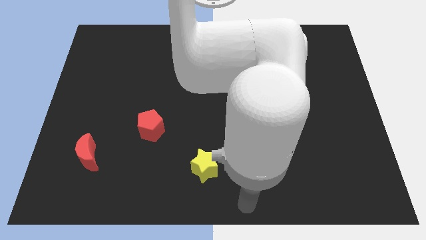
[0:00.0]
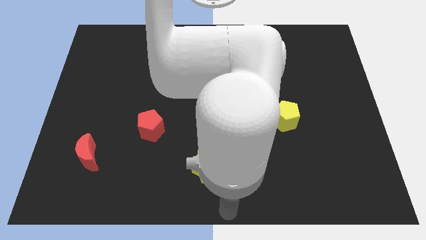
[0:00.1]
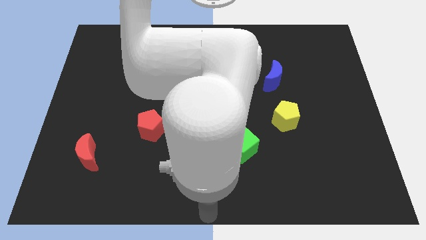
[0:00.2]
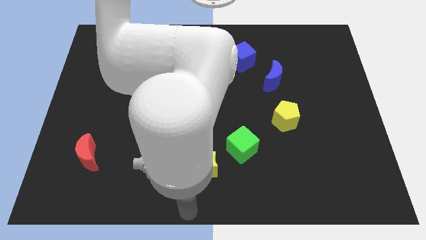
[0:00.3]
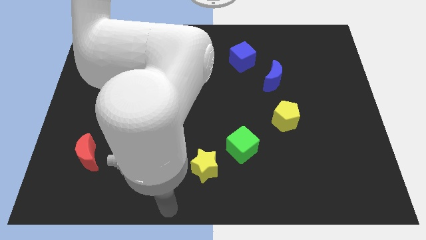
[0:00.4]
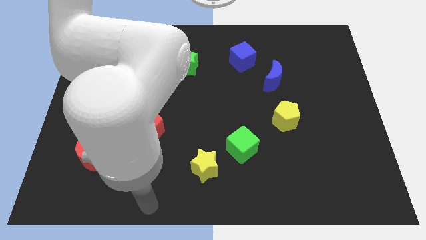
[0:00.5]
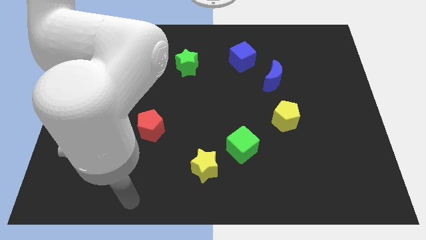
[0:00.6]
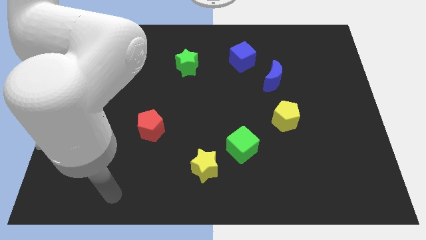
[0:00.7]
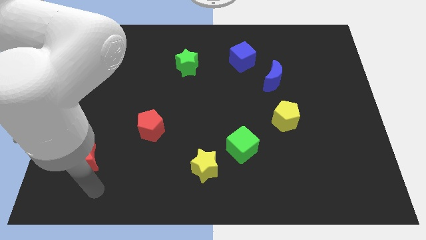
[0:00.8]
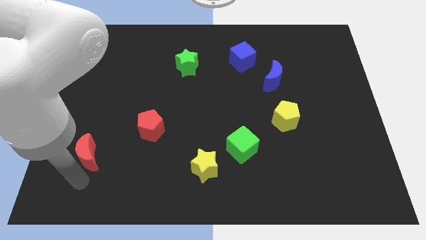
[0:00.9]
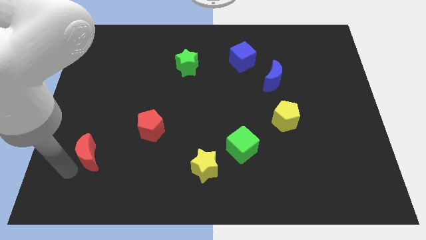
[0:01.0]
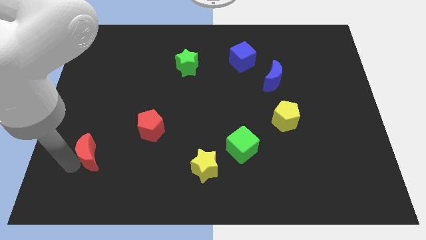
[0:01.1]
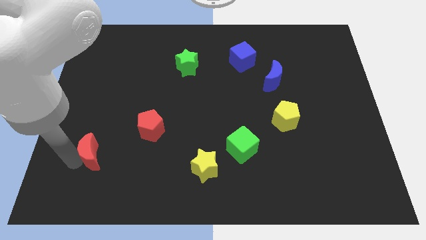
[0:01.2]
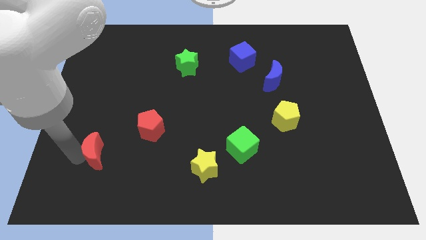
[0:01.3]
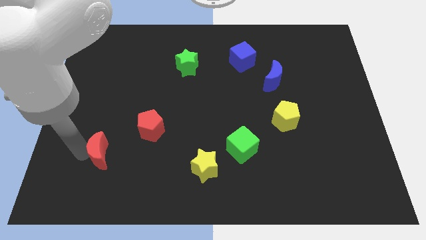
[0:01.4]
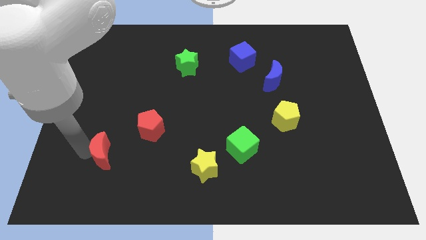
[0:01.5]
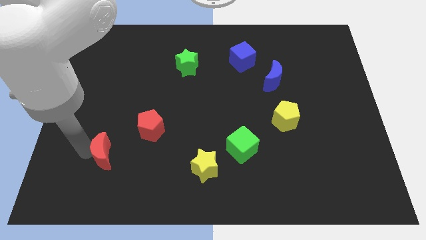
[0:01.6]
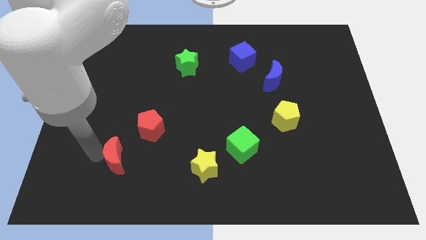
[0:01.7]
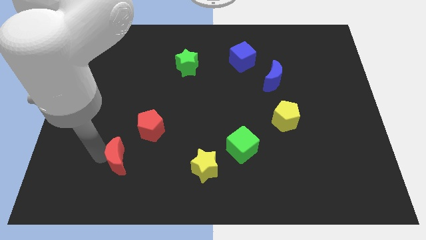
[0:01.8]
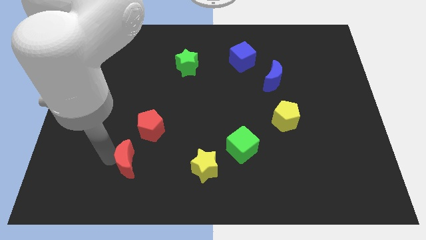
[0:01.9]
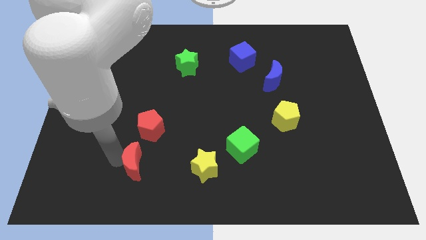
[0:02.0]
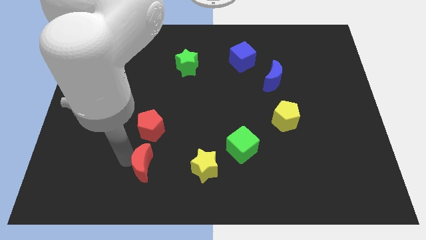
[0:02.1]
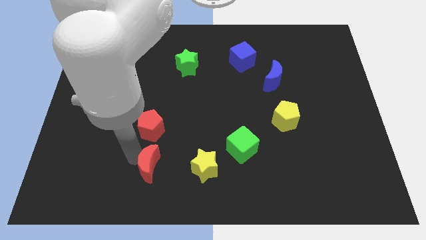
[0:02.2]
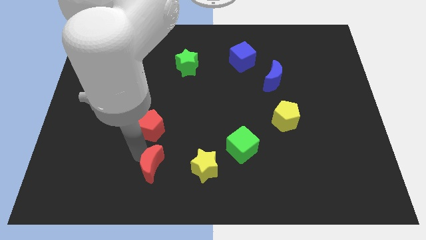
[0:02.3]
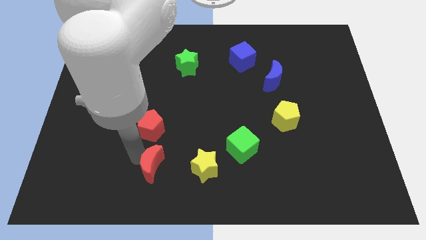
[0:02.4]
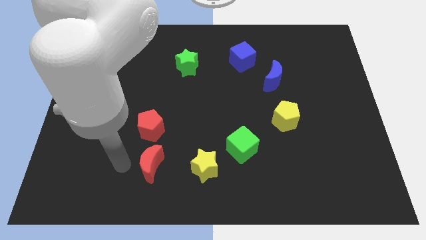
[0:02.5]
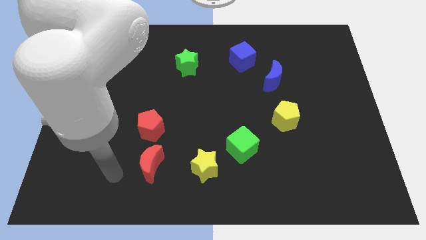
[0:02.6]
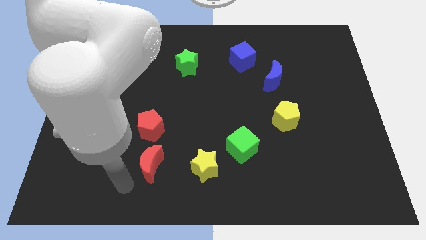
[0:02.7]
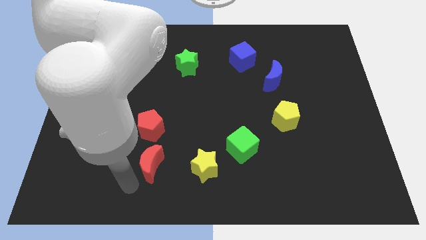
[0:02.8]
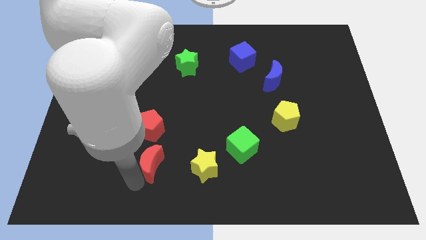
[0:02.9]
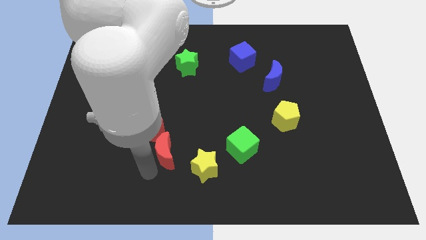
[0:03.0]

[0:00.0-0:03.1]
move the red moon to the left of the yellow star

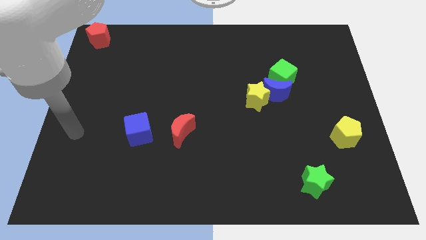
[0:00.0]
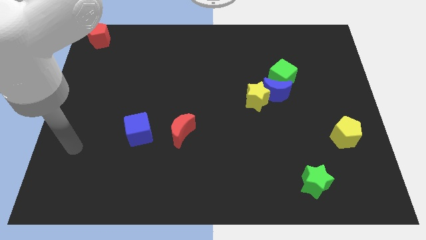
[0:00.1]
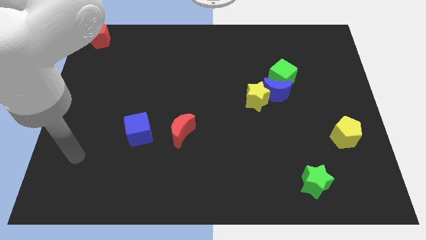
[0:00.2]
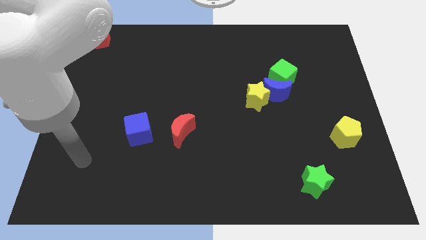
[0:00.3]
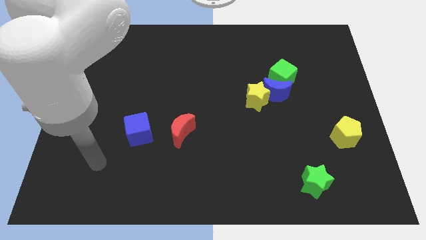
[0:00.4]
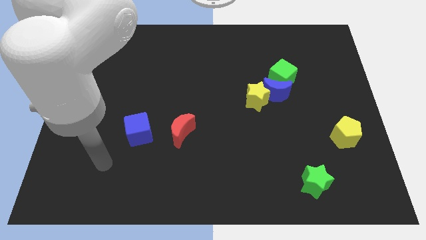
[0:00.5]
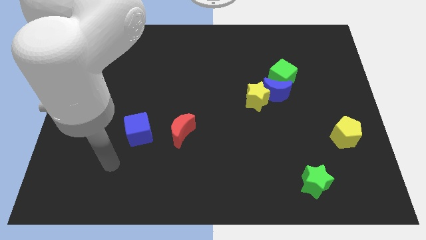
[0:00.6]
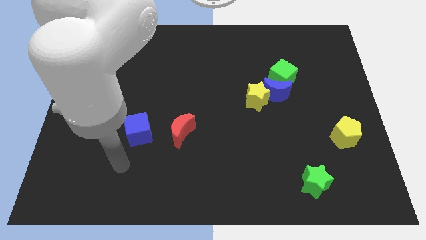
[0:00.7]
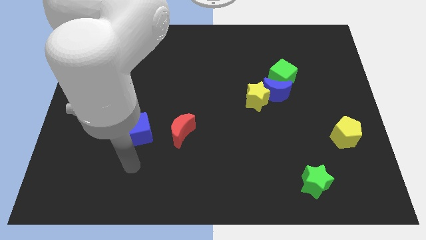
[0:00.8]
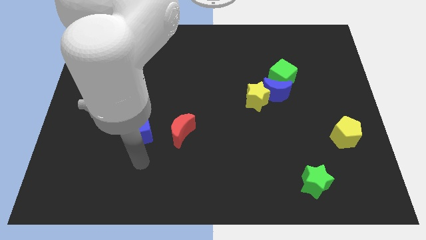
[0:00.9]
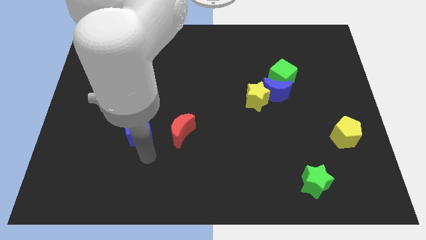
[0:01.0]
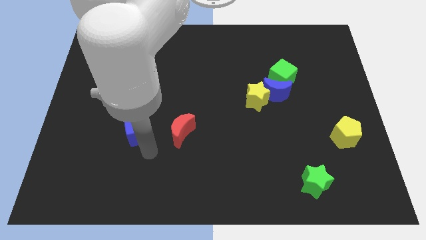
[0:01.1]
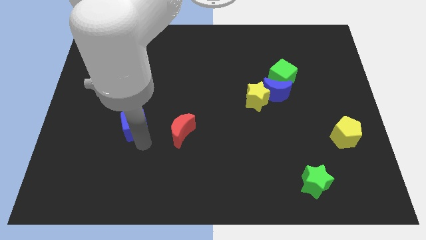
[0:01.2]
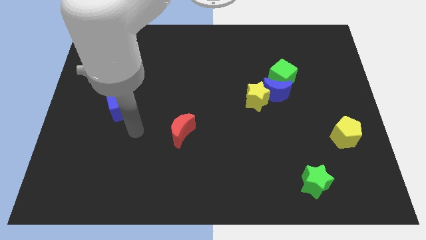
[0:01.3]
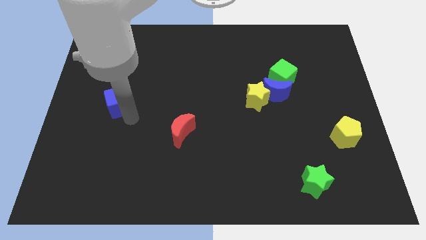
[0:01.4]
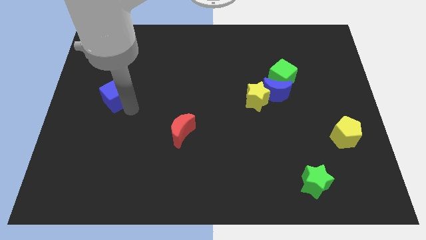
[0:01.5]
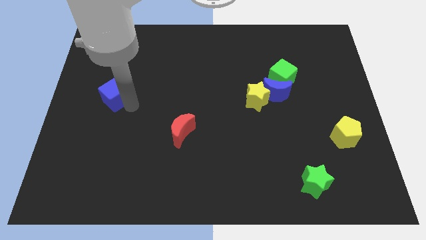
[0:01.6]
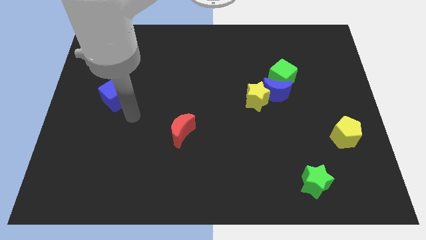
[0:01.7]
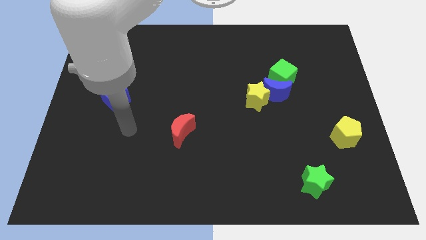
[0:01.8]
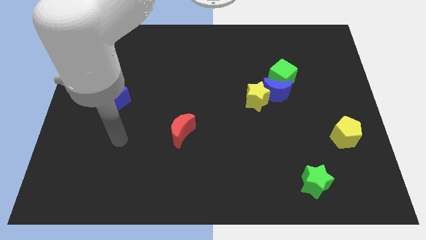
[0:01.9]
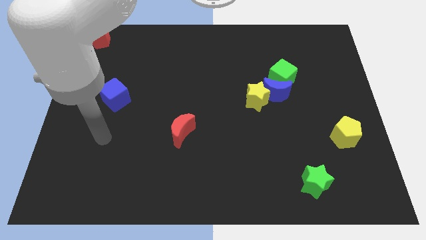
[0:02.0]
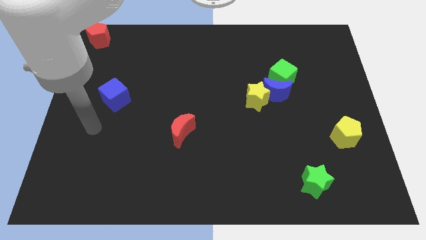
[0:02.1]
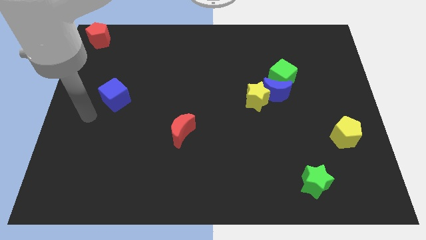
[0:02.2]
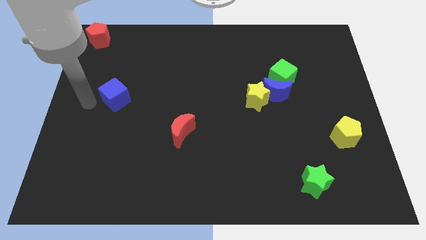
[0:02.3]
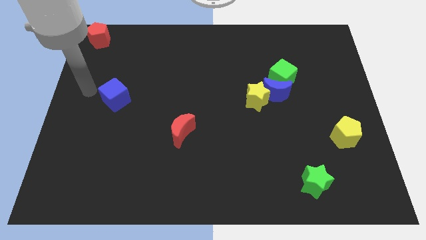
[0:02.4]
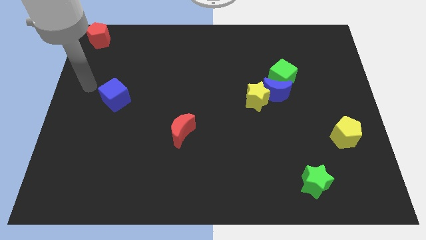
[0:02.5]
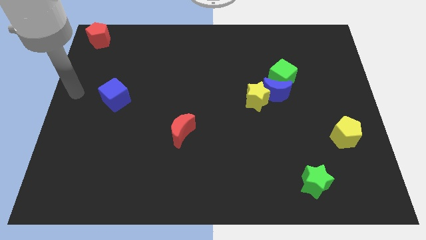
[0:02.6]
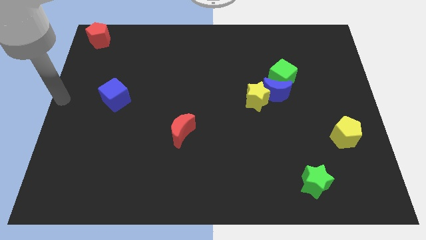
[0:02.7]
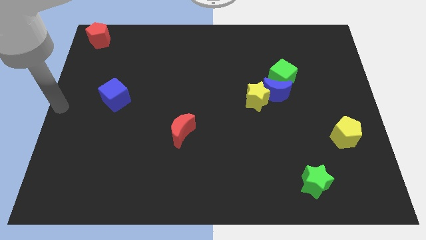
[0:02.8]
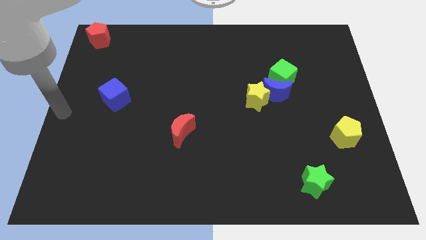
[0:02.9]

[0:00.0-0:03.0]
separate blue cube from red crescent

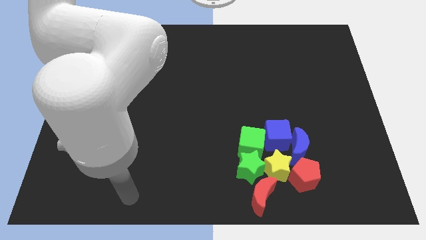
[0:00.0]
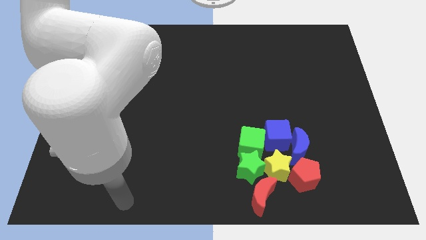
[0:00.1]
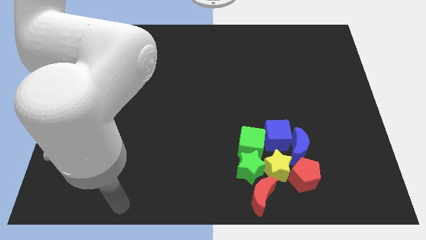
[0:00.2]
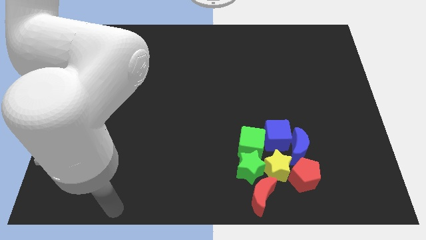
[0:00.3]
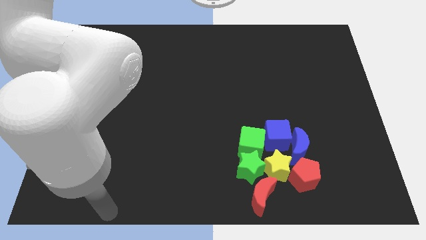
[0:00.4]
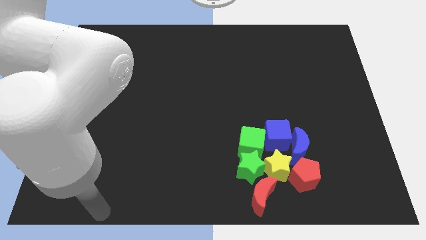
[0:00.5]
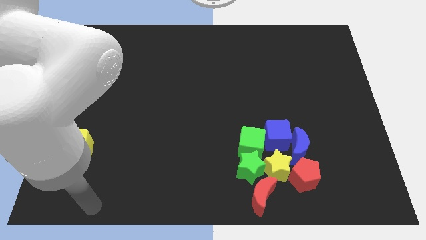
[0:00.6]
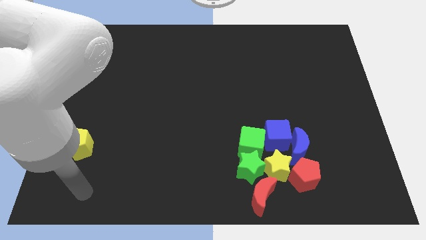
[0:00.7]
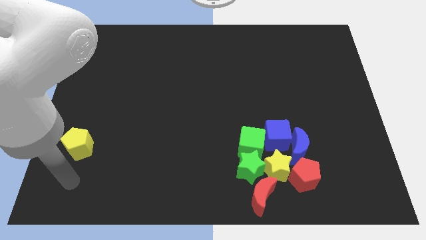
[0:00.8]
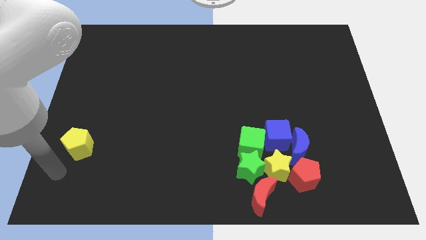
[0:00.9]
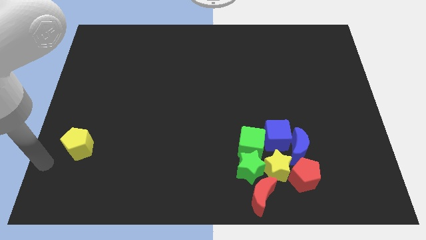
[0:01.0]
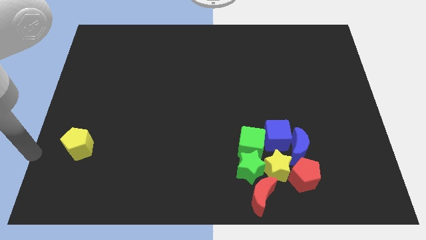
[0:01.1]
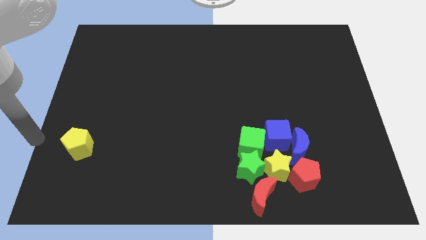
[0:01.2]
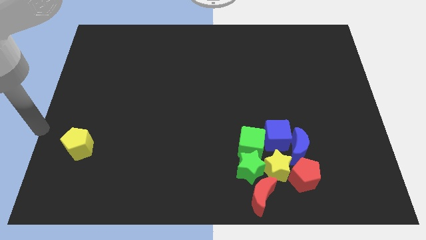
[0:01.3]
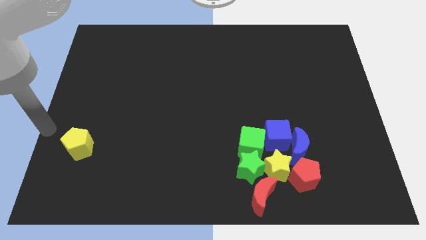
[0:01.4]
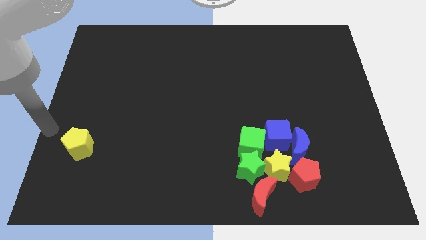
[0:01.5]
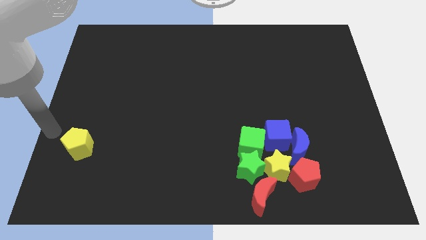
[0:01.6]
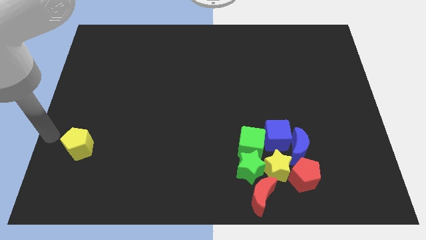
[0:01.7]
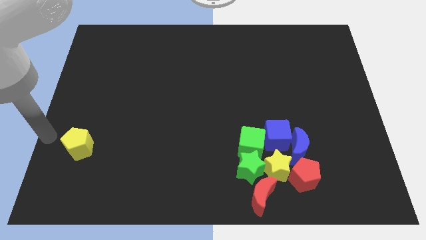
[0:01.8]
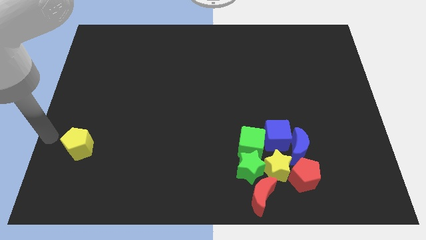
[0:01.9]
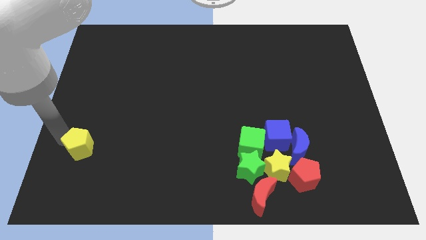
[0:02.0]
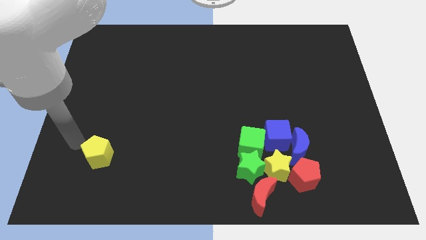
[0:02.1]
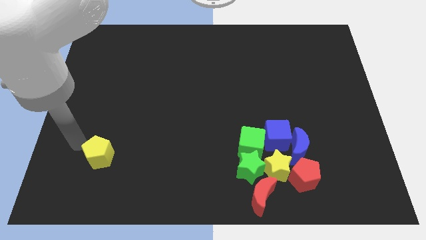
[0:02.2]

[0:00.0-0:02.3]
slightly push the yellow pentagon towards right side

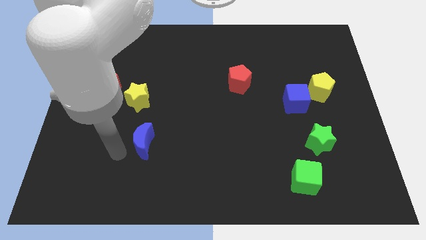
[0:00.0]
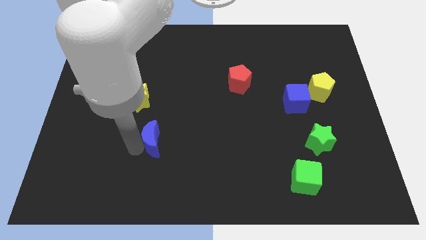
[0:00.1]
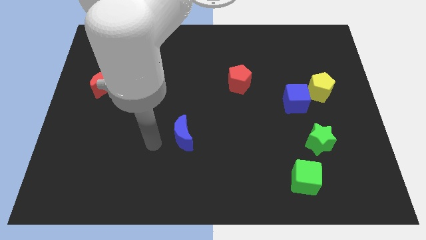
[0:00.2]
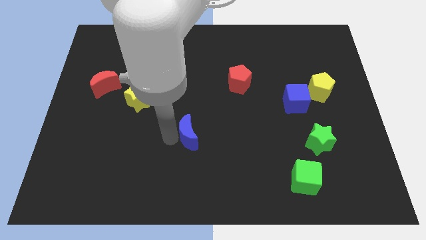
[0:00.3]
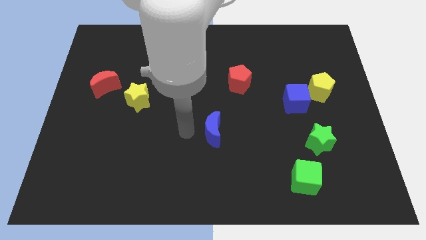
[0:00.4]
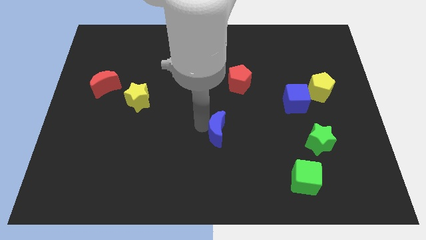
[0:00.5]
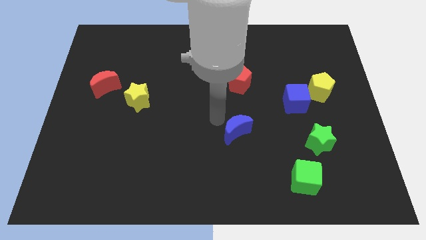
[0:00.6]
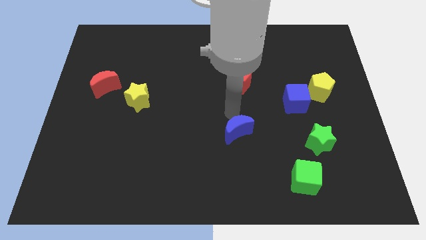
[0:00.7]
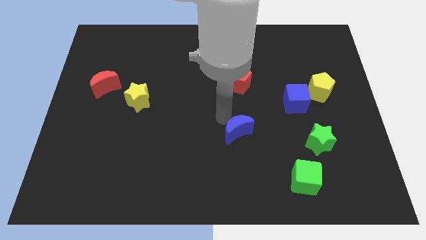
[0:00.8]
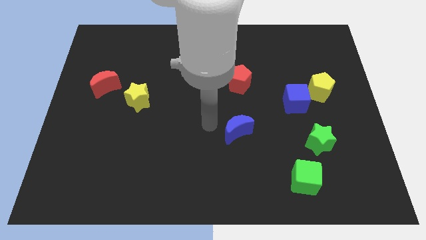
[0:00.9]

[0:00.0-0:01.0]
place the blue moon down to the red pentagon
